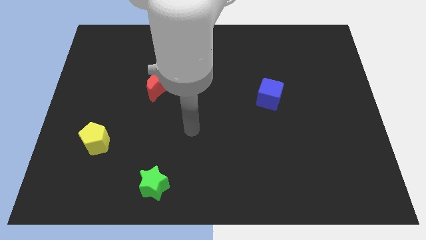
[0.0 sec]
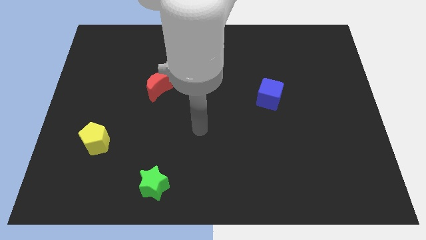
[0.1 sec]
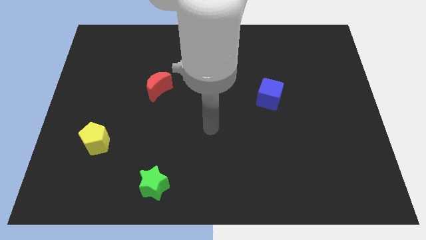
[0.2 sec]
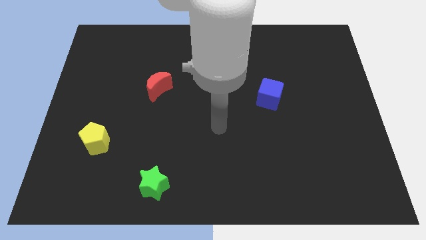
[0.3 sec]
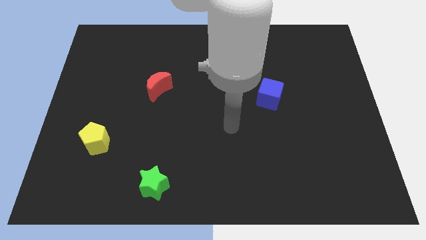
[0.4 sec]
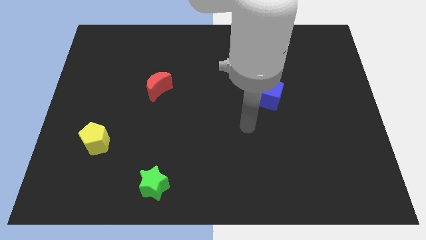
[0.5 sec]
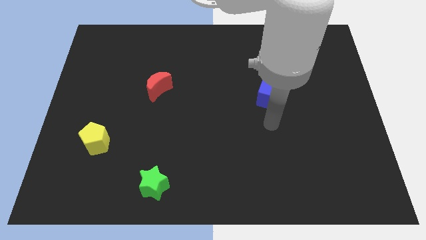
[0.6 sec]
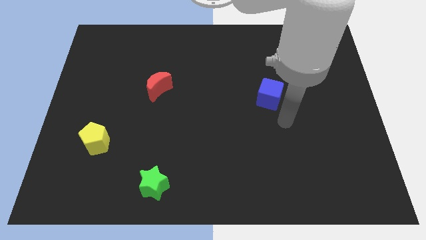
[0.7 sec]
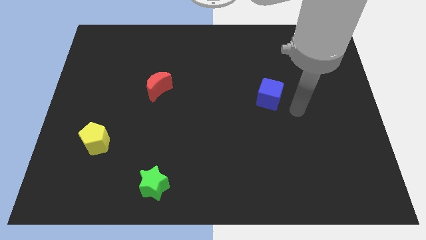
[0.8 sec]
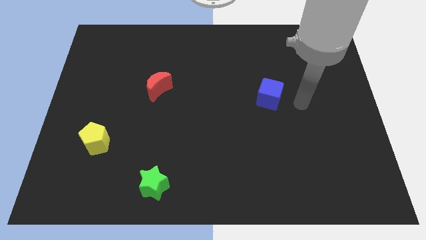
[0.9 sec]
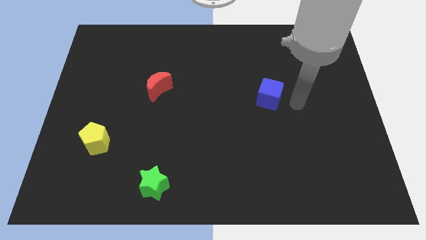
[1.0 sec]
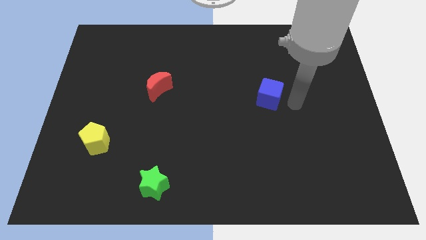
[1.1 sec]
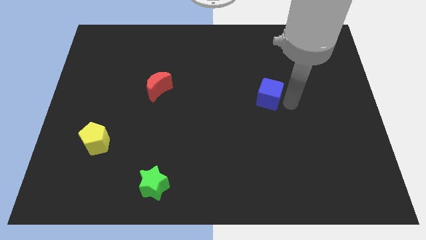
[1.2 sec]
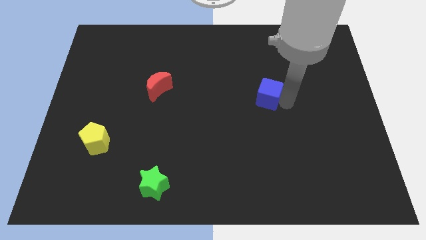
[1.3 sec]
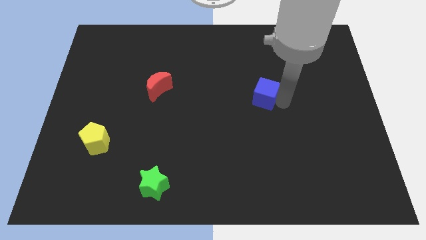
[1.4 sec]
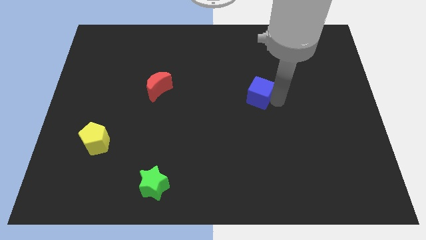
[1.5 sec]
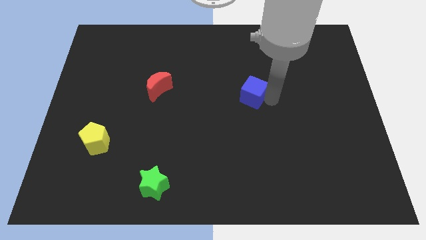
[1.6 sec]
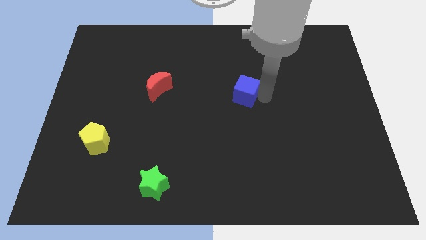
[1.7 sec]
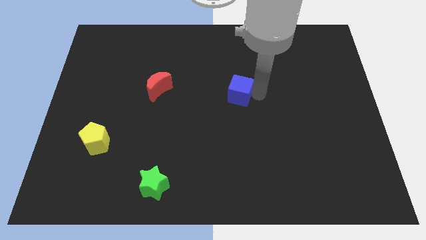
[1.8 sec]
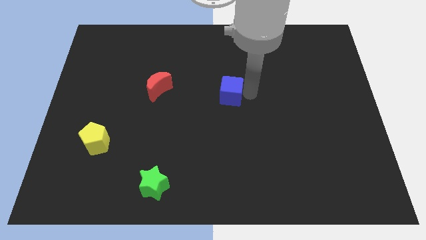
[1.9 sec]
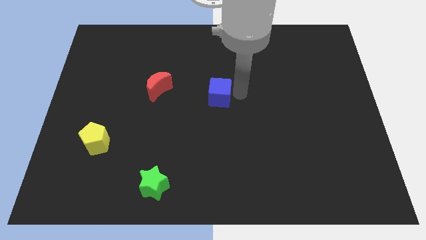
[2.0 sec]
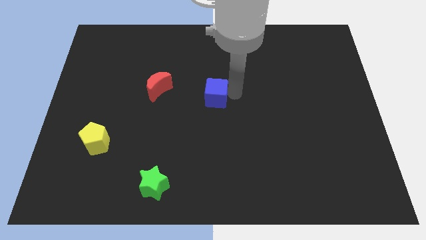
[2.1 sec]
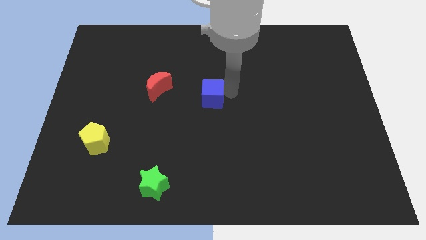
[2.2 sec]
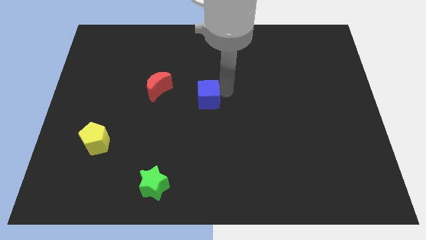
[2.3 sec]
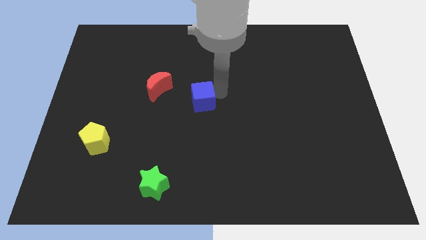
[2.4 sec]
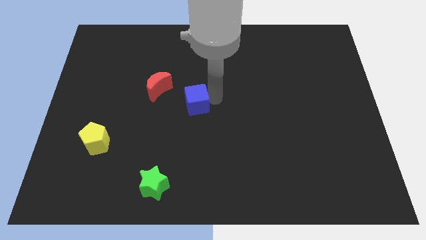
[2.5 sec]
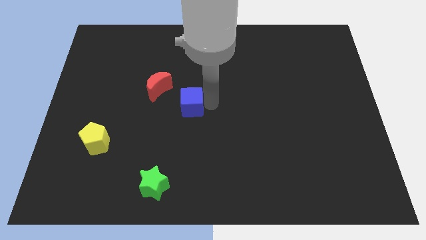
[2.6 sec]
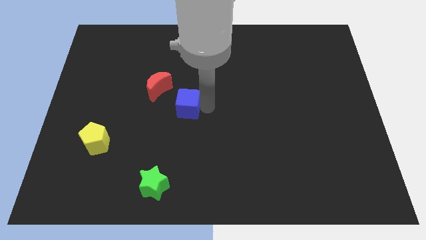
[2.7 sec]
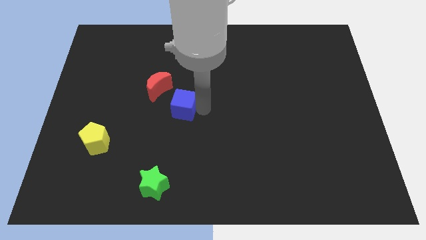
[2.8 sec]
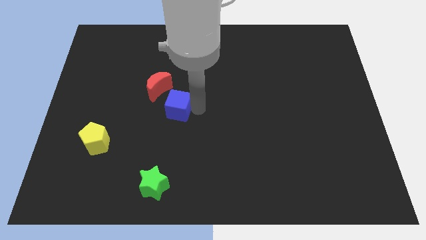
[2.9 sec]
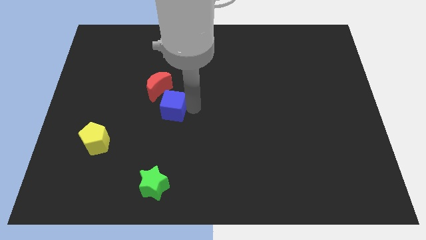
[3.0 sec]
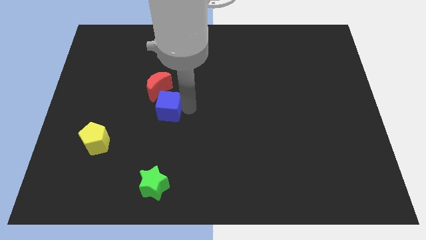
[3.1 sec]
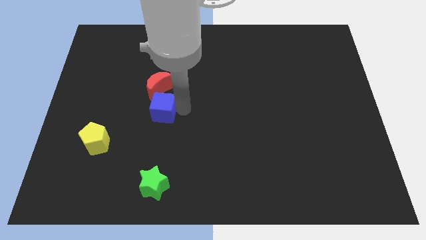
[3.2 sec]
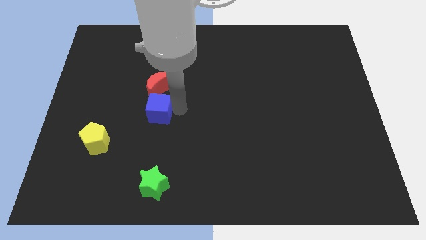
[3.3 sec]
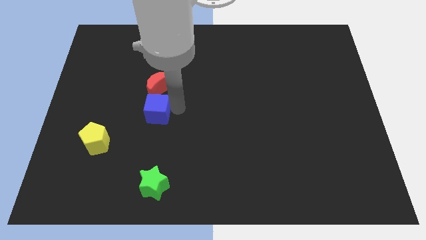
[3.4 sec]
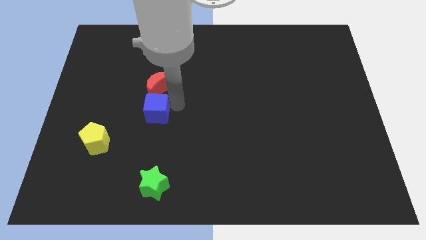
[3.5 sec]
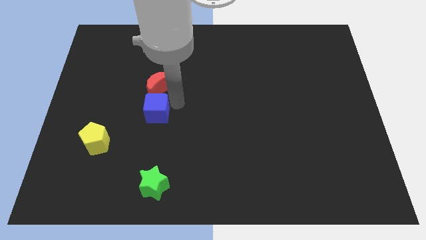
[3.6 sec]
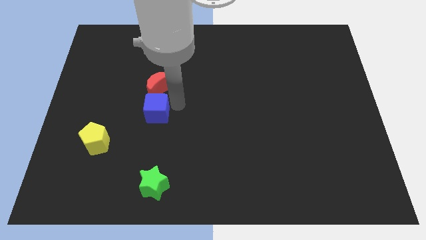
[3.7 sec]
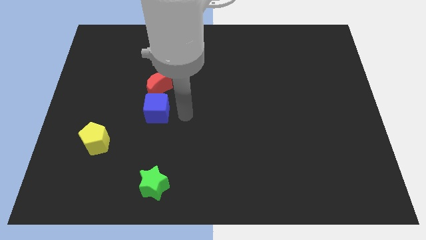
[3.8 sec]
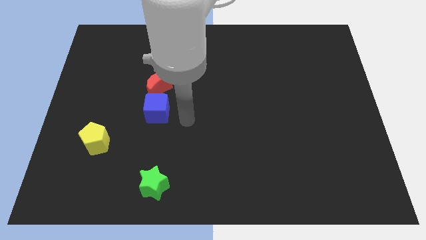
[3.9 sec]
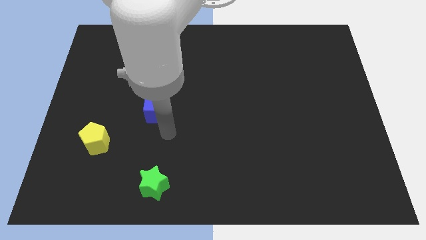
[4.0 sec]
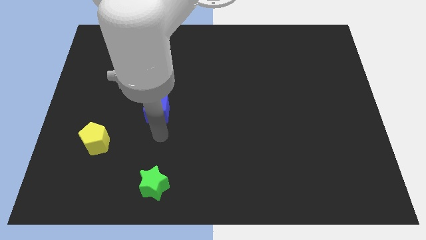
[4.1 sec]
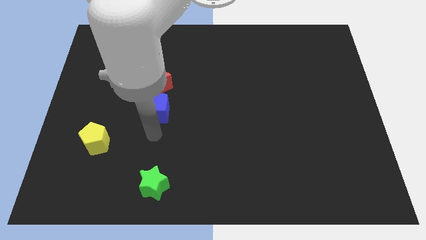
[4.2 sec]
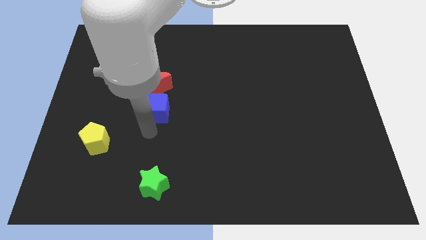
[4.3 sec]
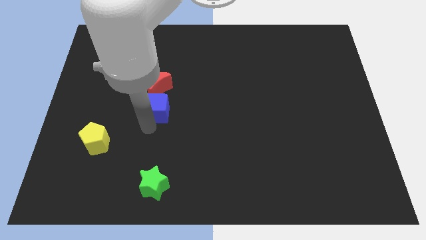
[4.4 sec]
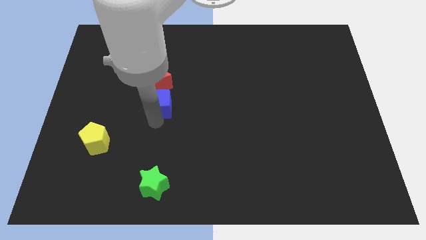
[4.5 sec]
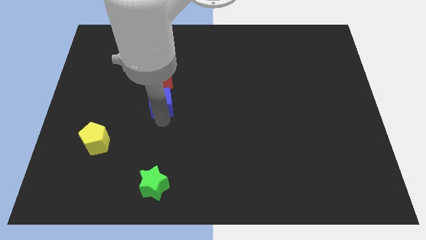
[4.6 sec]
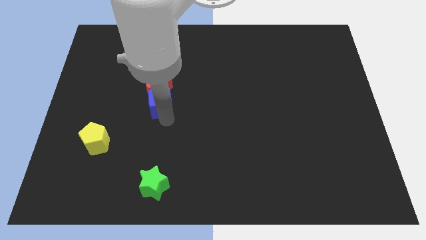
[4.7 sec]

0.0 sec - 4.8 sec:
push the cube to the red block

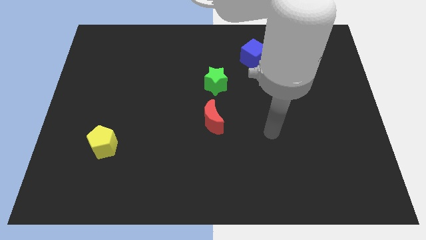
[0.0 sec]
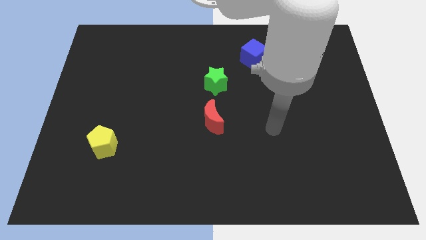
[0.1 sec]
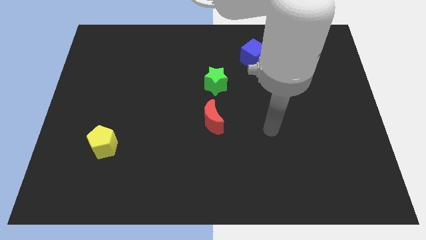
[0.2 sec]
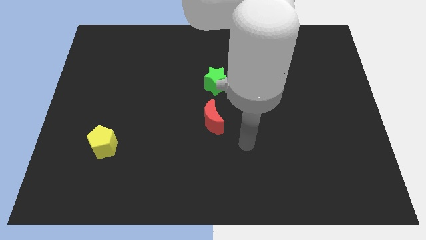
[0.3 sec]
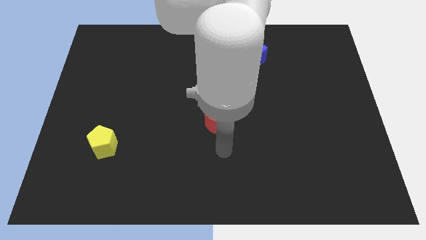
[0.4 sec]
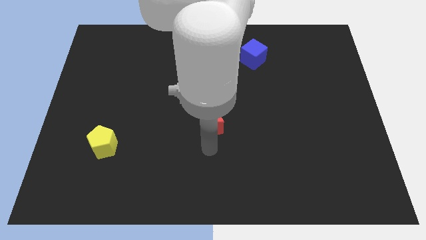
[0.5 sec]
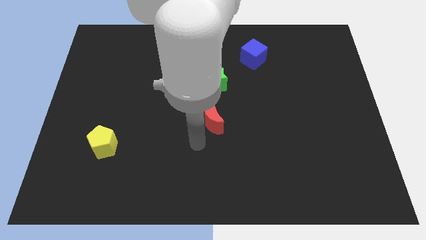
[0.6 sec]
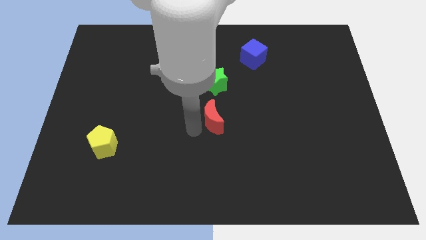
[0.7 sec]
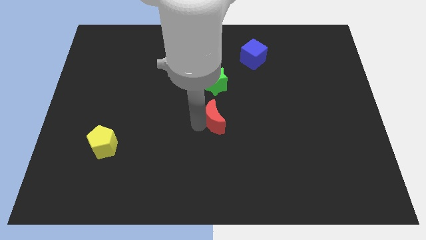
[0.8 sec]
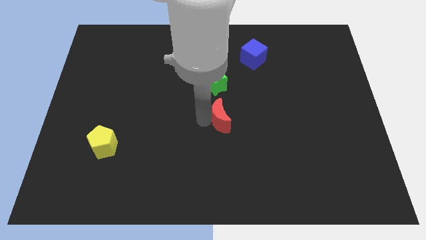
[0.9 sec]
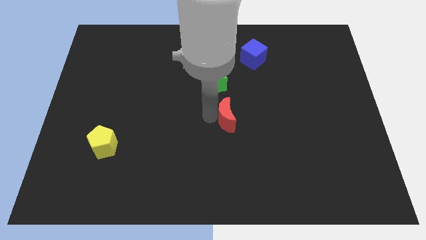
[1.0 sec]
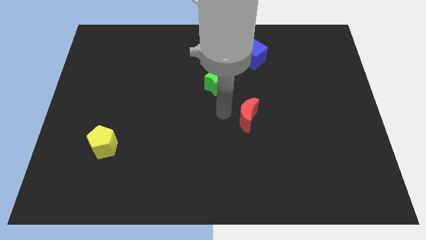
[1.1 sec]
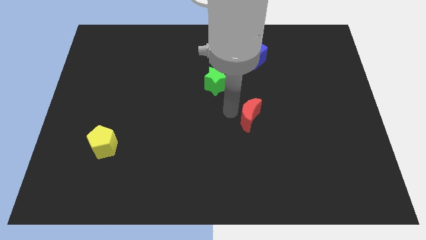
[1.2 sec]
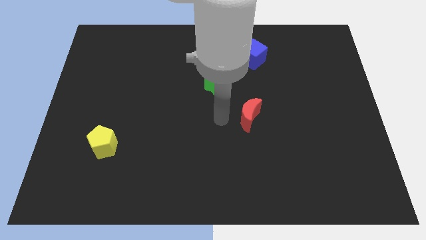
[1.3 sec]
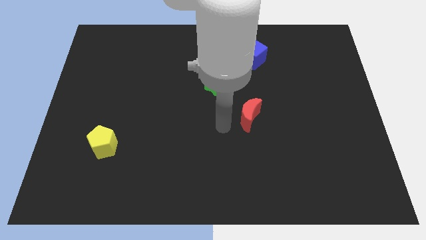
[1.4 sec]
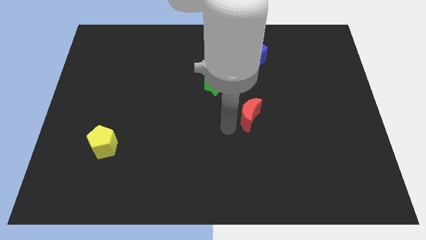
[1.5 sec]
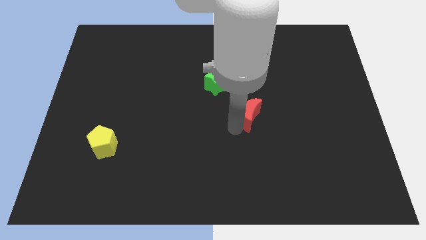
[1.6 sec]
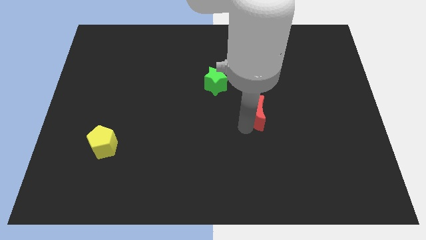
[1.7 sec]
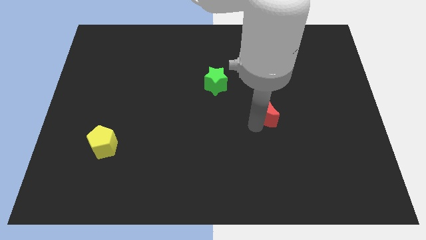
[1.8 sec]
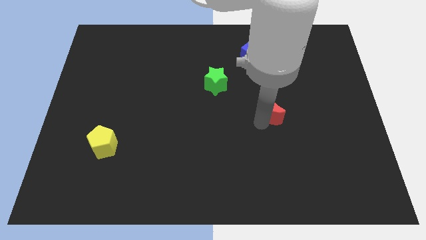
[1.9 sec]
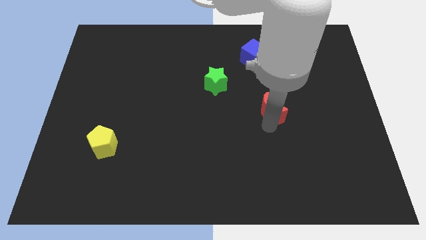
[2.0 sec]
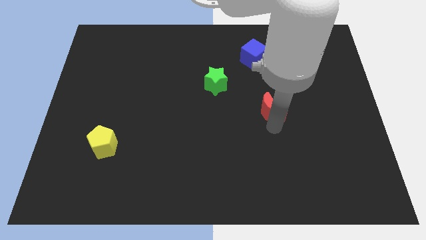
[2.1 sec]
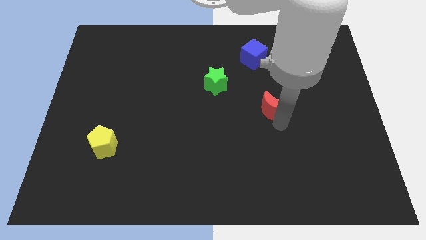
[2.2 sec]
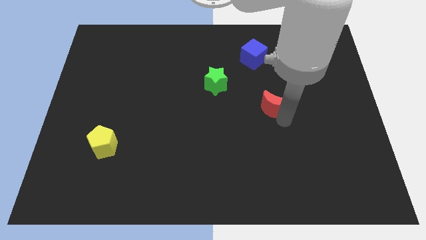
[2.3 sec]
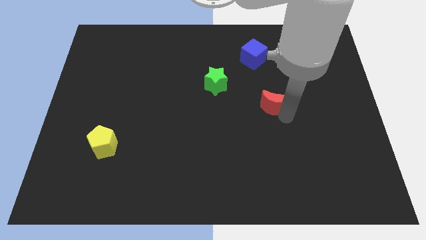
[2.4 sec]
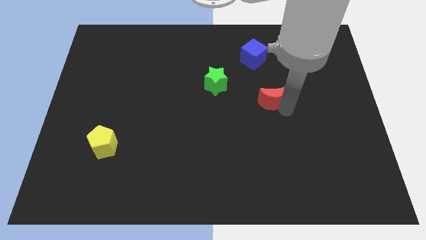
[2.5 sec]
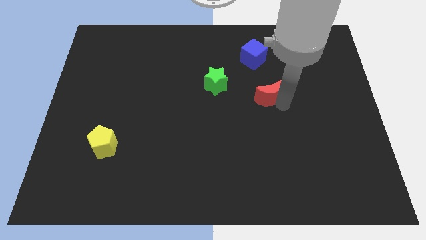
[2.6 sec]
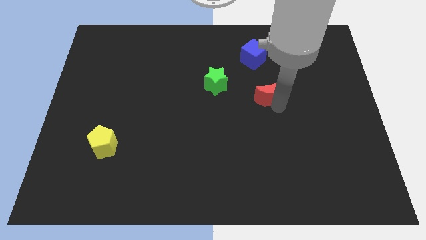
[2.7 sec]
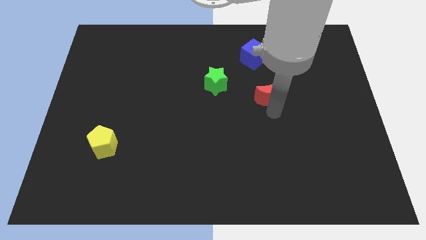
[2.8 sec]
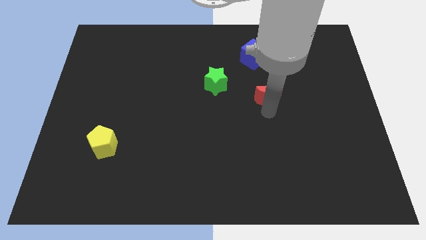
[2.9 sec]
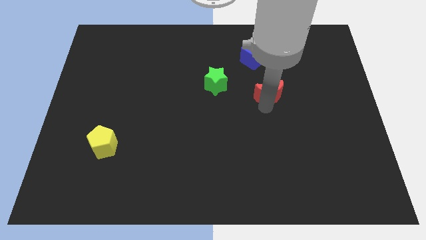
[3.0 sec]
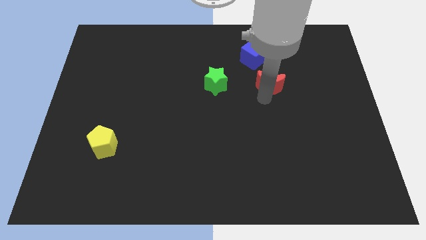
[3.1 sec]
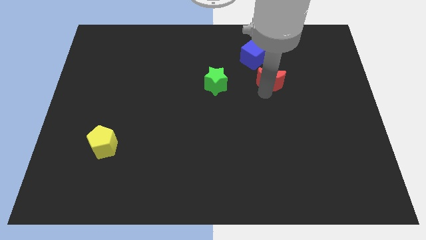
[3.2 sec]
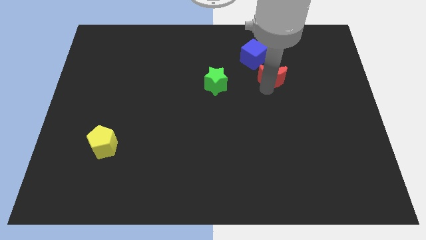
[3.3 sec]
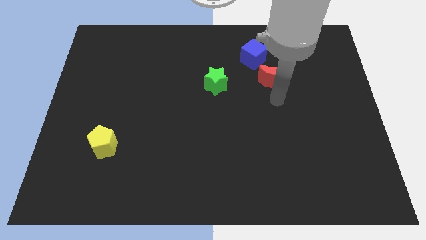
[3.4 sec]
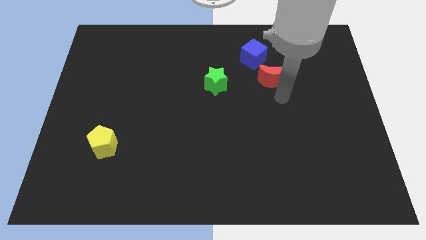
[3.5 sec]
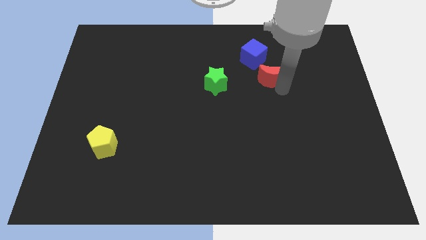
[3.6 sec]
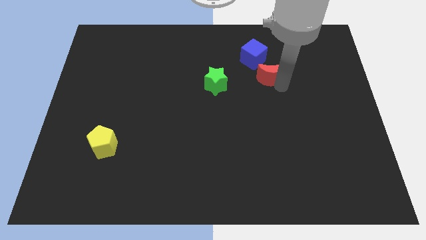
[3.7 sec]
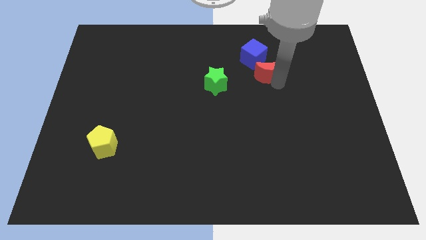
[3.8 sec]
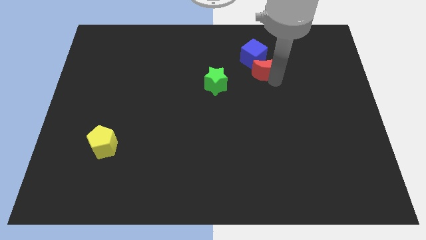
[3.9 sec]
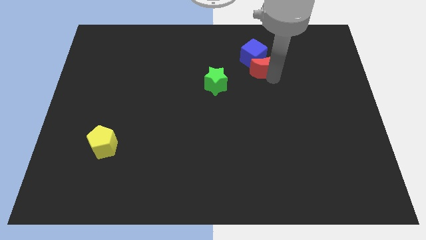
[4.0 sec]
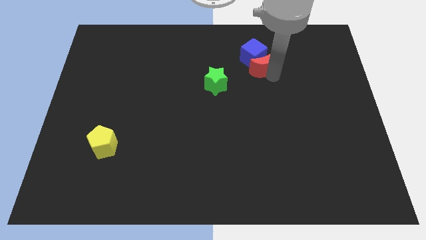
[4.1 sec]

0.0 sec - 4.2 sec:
move the moon close to the blue block
